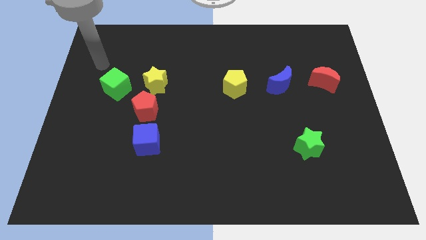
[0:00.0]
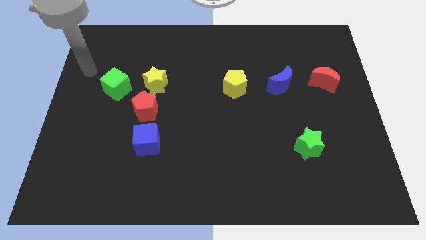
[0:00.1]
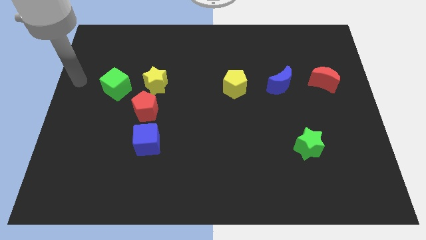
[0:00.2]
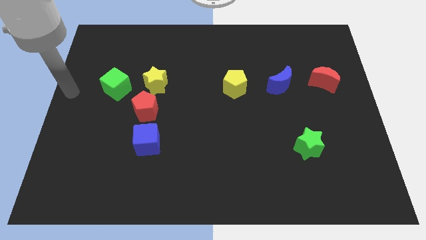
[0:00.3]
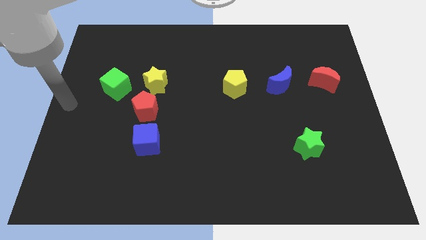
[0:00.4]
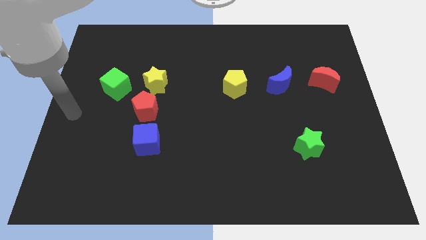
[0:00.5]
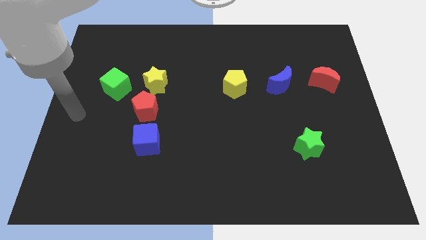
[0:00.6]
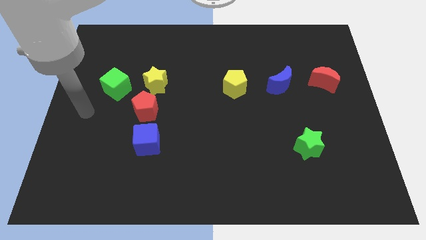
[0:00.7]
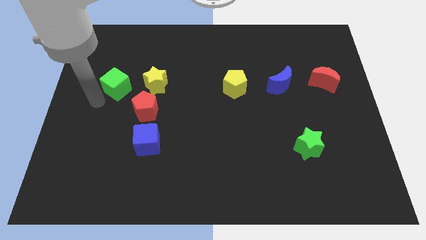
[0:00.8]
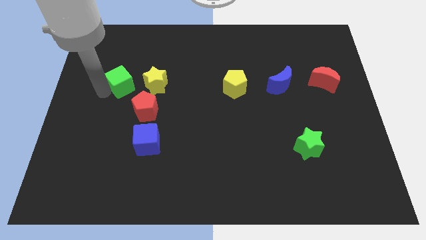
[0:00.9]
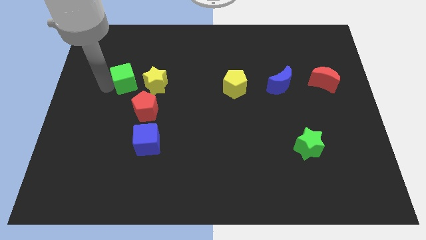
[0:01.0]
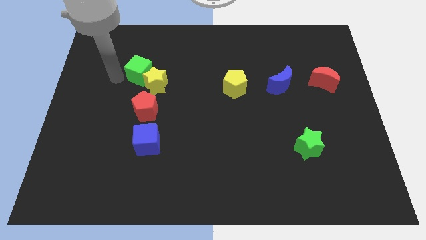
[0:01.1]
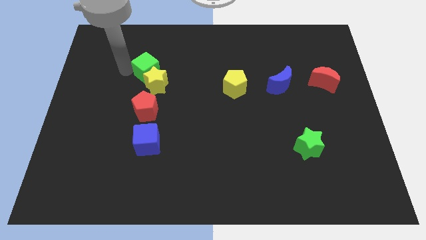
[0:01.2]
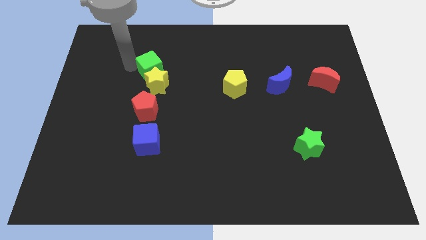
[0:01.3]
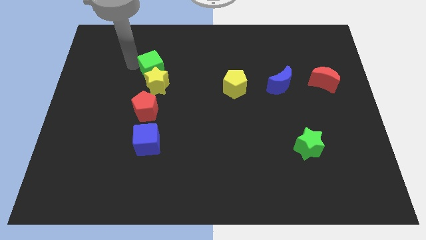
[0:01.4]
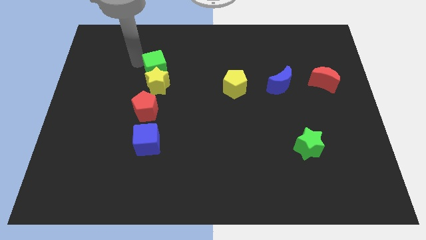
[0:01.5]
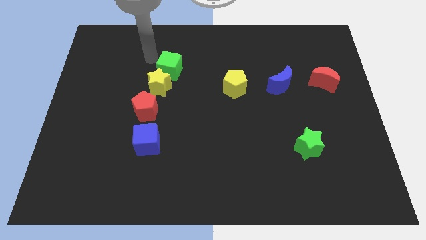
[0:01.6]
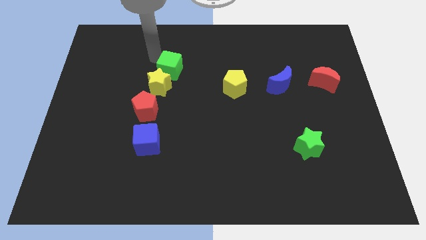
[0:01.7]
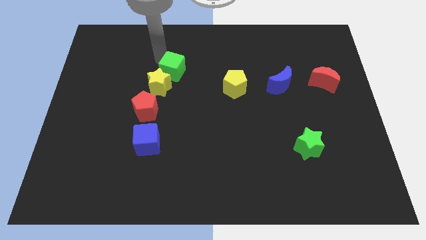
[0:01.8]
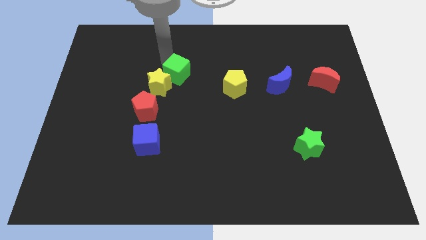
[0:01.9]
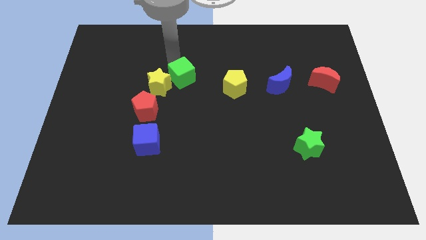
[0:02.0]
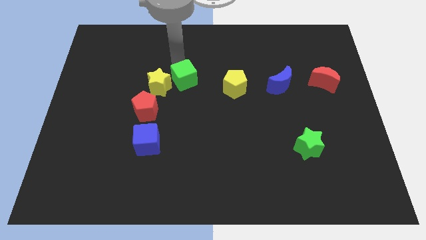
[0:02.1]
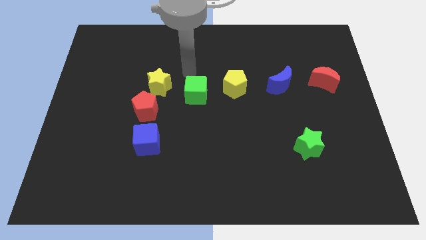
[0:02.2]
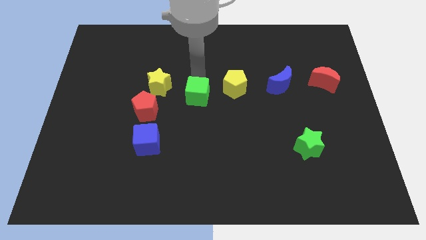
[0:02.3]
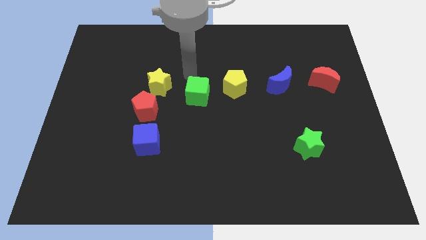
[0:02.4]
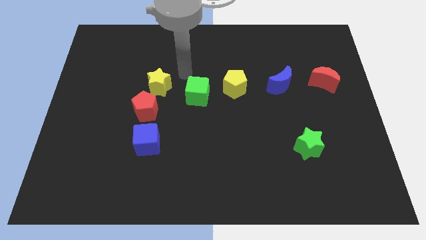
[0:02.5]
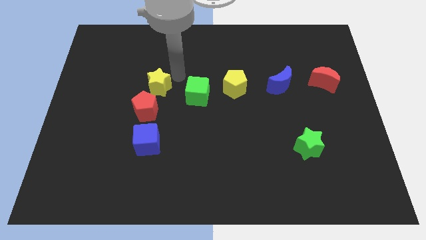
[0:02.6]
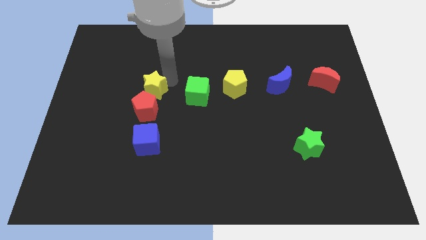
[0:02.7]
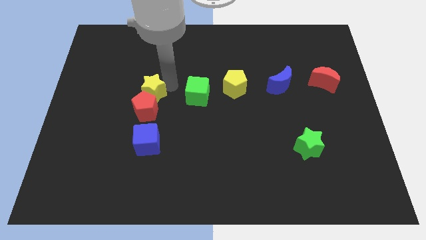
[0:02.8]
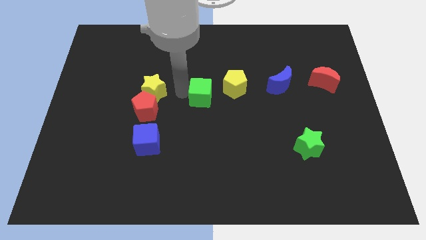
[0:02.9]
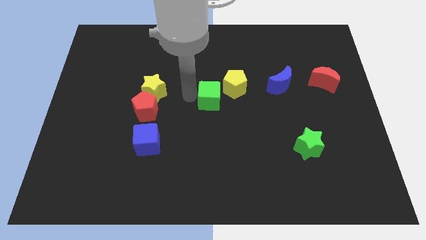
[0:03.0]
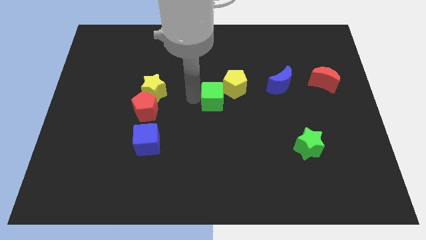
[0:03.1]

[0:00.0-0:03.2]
move the green cube diagonally left of the yellow pentagon

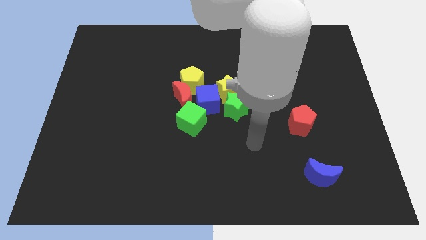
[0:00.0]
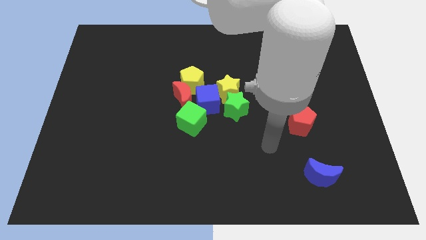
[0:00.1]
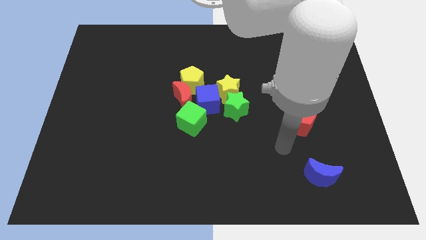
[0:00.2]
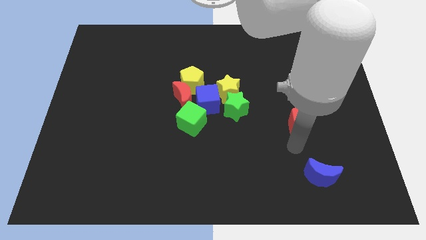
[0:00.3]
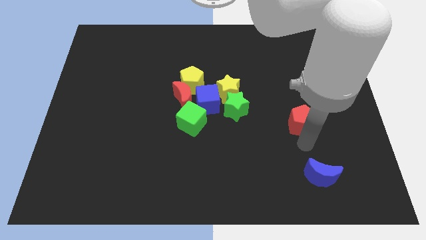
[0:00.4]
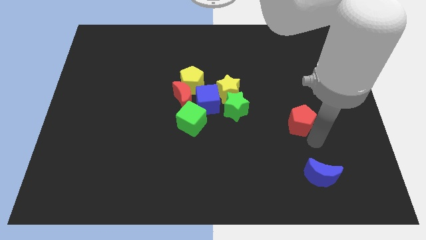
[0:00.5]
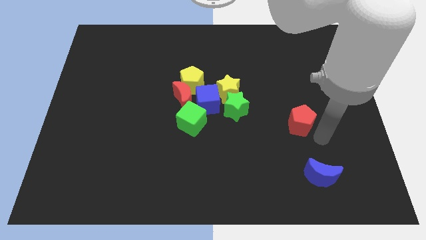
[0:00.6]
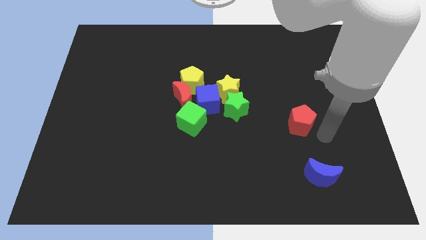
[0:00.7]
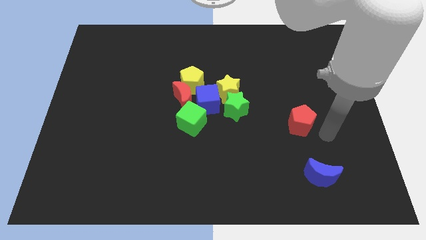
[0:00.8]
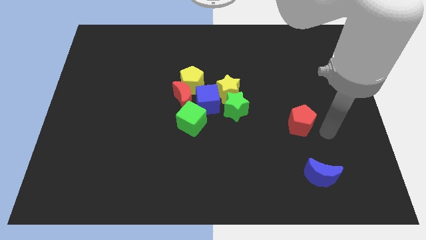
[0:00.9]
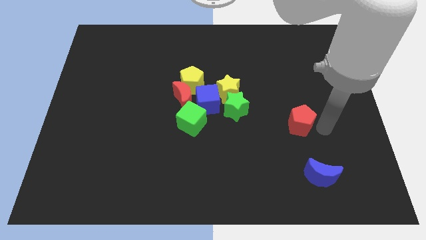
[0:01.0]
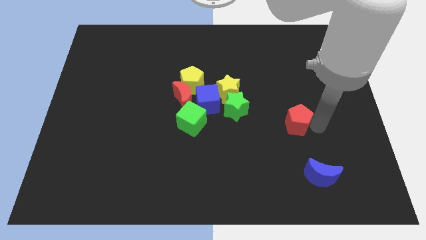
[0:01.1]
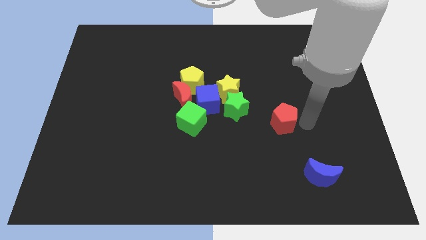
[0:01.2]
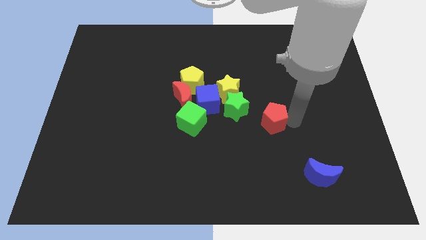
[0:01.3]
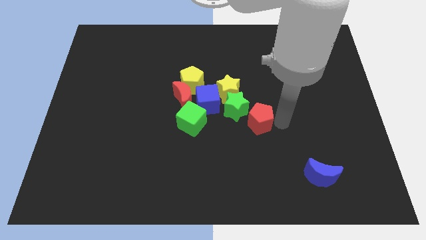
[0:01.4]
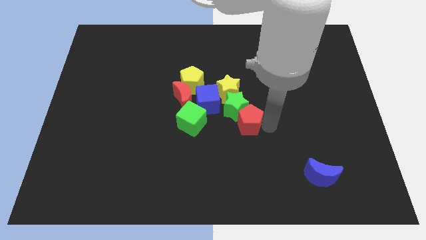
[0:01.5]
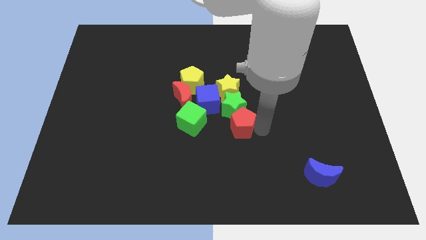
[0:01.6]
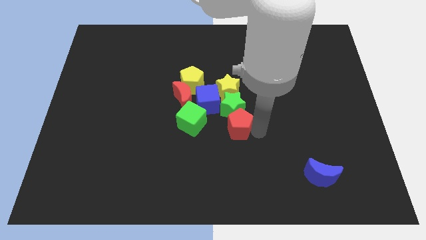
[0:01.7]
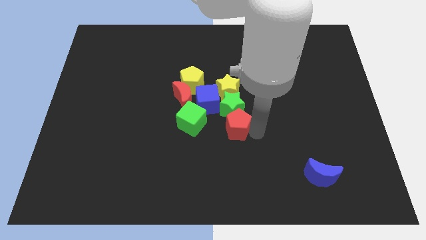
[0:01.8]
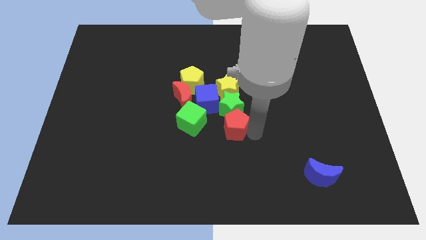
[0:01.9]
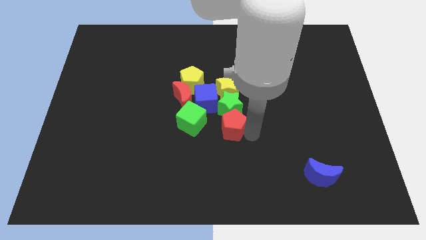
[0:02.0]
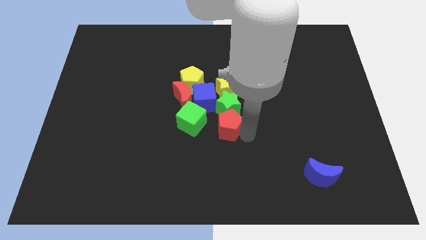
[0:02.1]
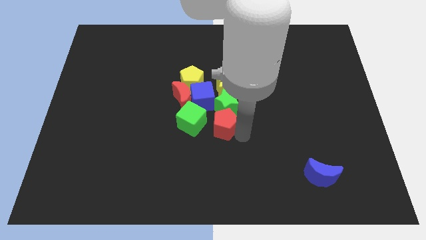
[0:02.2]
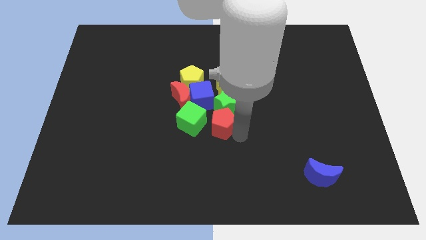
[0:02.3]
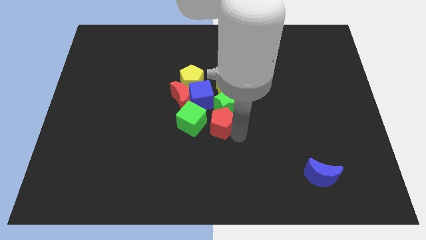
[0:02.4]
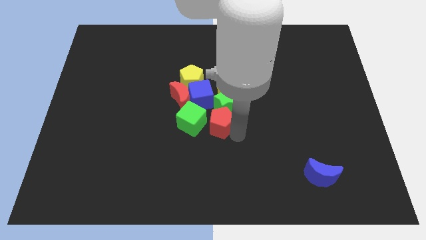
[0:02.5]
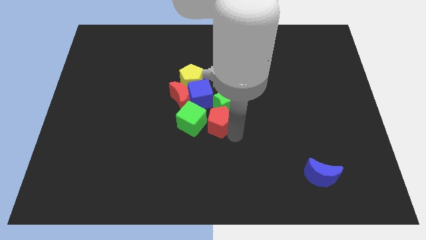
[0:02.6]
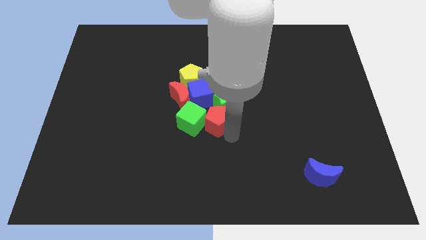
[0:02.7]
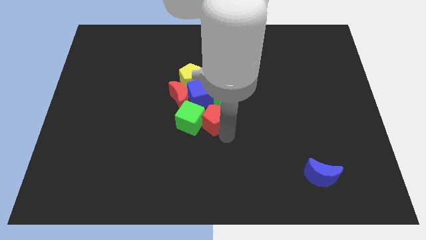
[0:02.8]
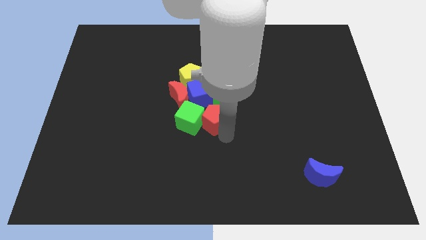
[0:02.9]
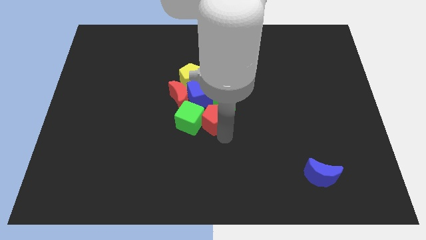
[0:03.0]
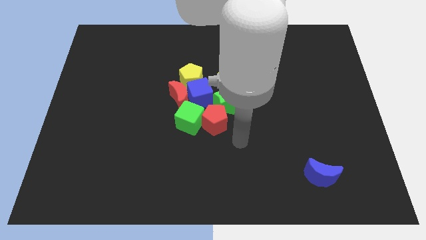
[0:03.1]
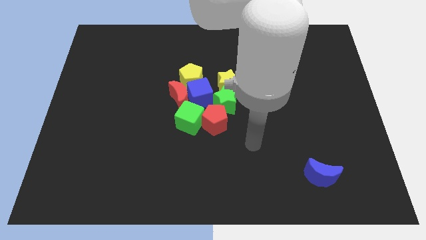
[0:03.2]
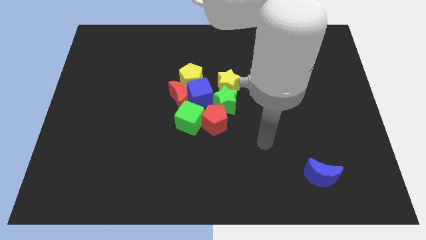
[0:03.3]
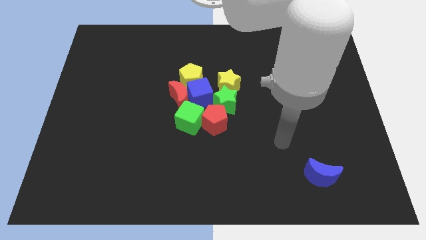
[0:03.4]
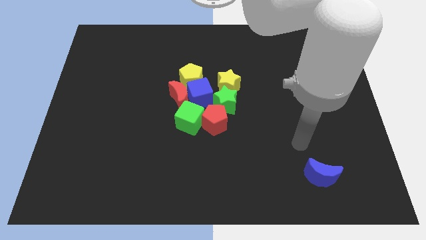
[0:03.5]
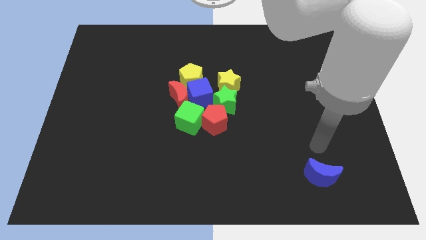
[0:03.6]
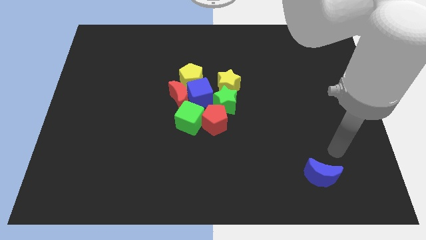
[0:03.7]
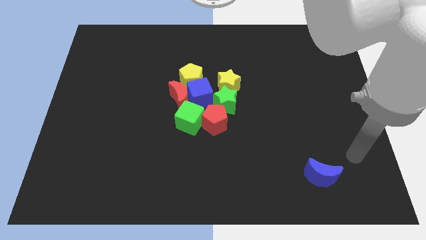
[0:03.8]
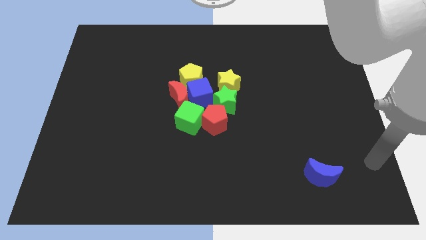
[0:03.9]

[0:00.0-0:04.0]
push the red pentagon to the right of the green cube

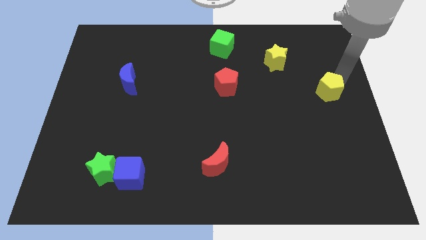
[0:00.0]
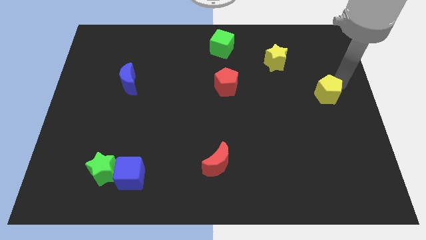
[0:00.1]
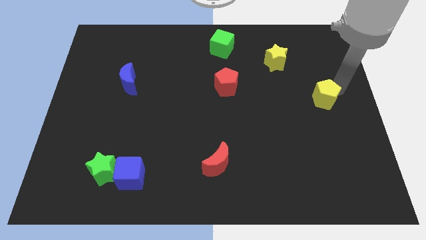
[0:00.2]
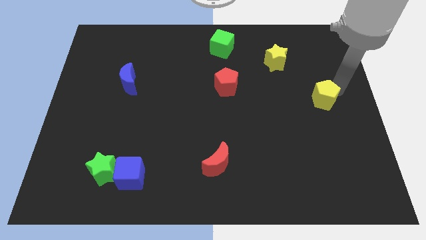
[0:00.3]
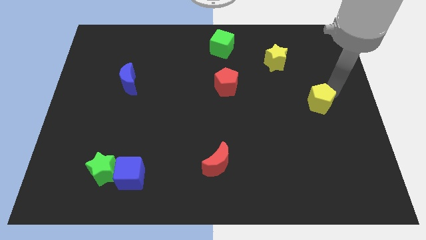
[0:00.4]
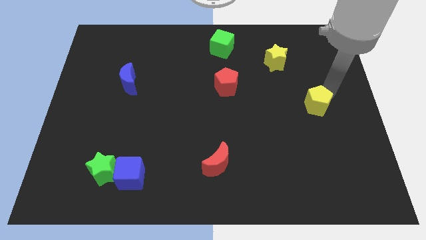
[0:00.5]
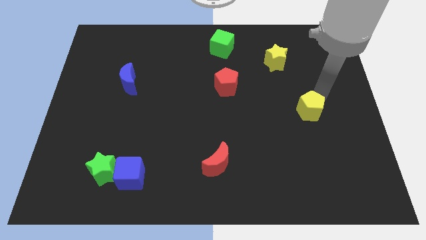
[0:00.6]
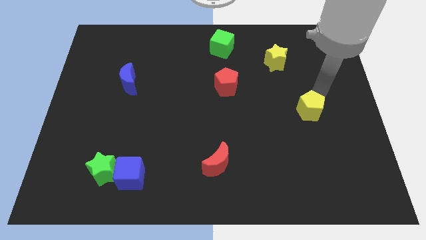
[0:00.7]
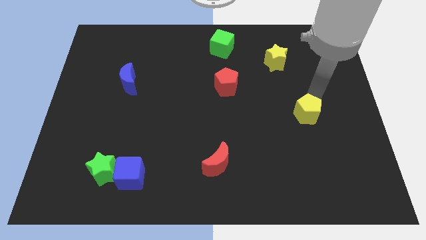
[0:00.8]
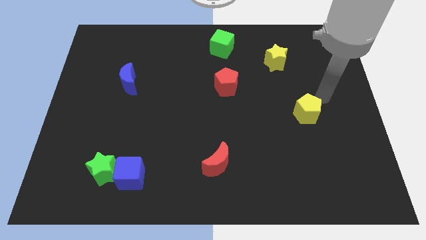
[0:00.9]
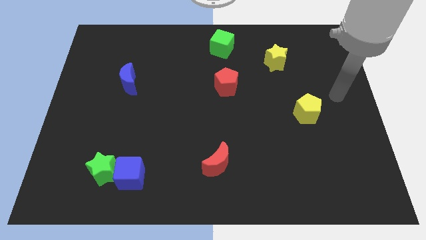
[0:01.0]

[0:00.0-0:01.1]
place the yellow pentagon diagonally above the top right side of the red moon

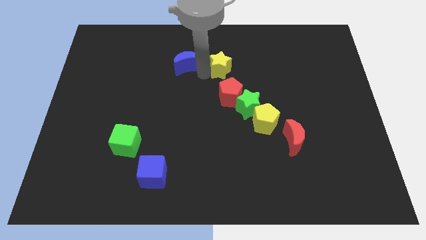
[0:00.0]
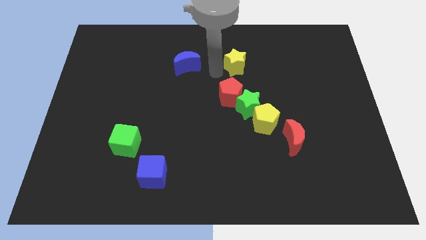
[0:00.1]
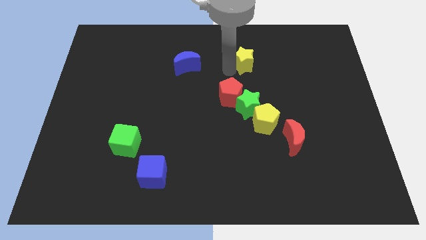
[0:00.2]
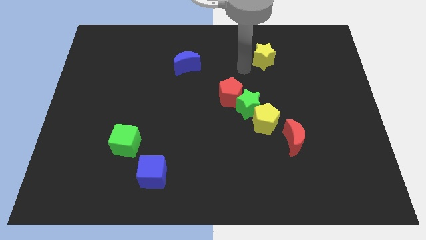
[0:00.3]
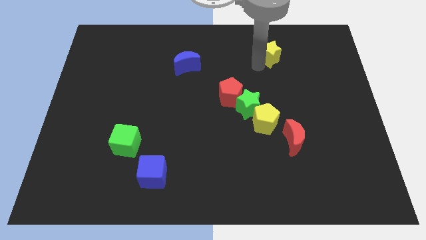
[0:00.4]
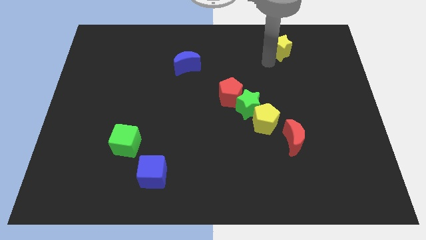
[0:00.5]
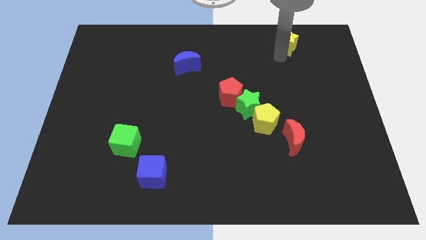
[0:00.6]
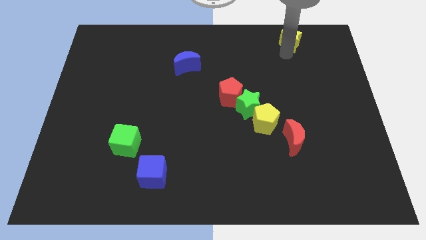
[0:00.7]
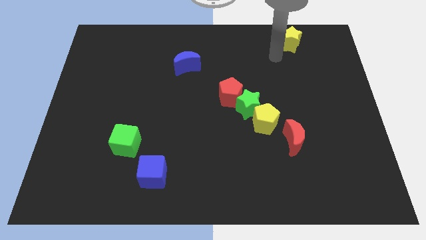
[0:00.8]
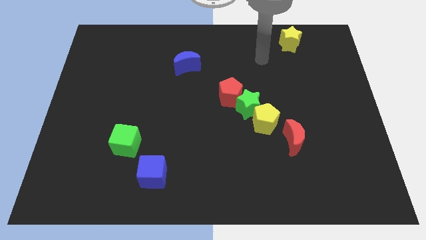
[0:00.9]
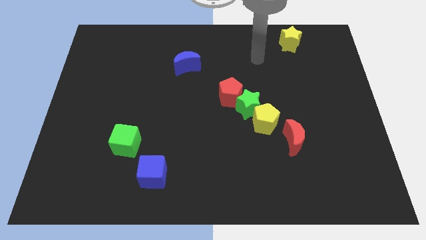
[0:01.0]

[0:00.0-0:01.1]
push the yellow star to the top of the board slightly
